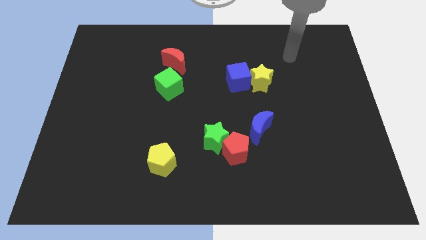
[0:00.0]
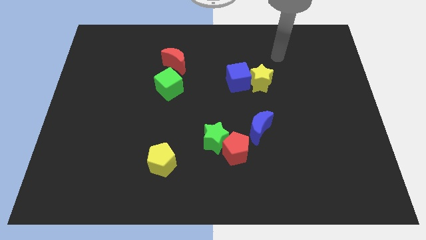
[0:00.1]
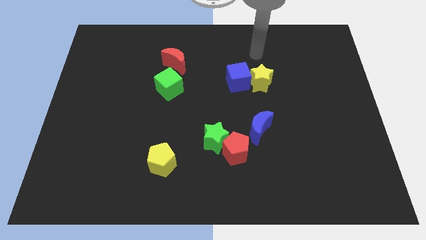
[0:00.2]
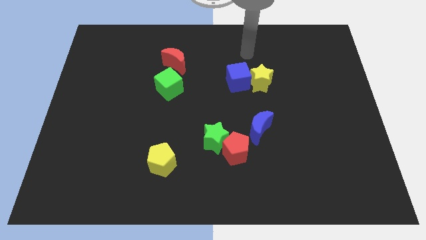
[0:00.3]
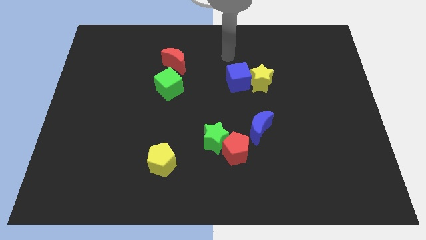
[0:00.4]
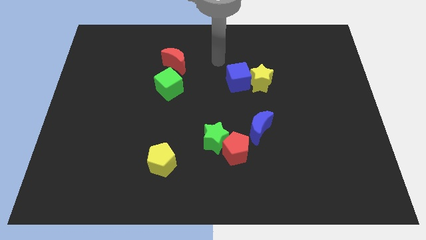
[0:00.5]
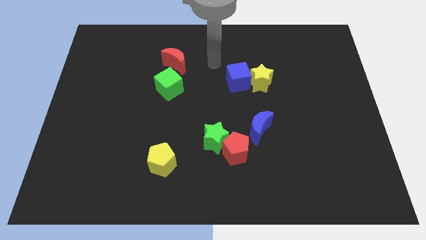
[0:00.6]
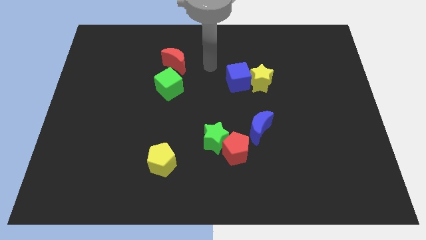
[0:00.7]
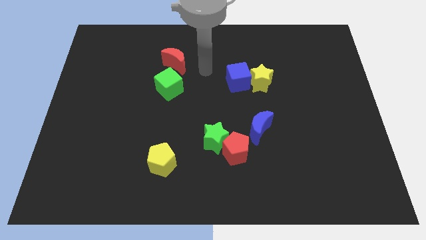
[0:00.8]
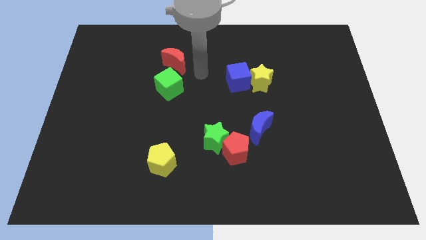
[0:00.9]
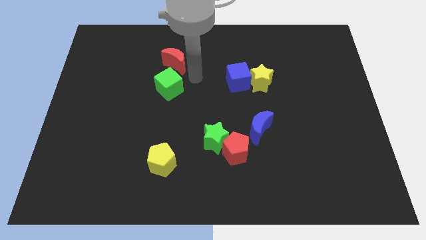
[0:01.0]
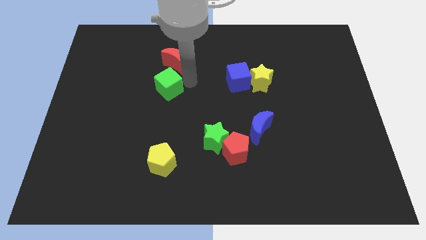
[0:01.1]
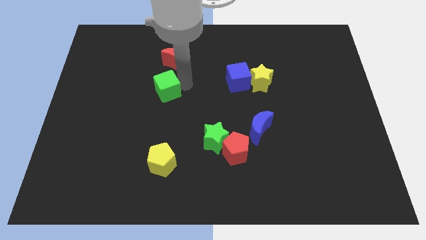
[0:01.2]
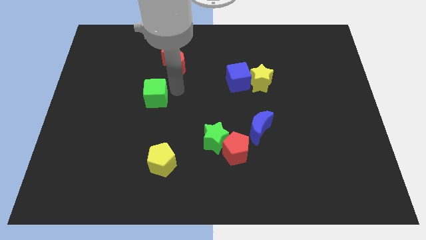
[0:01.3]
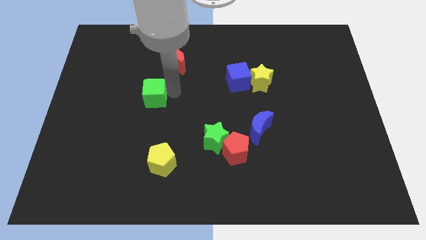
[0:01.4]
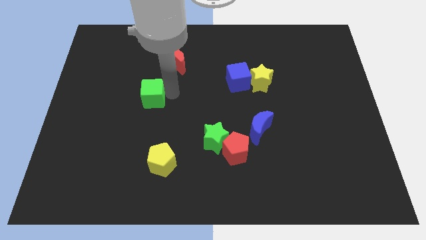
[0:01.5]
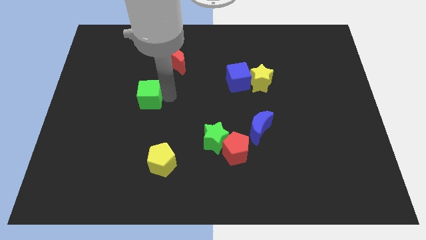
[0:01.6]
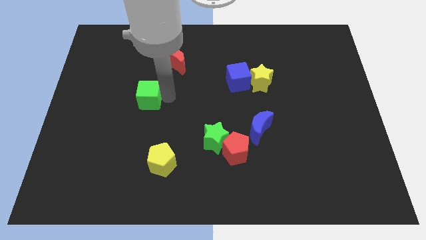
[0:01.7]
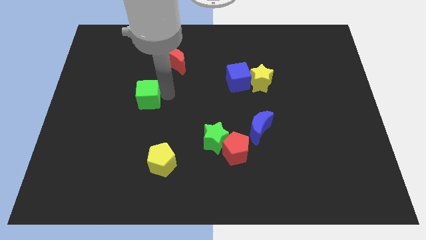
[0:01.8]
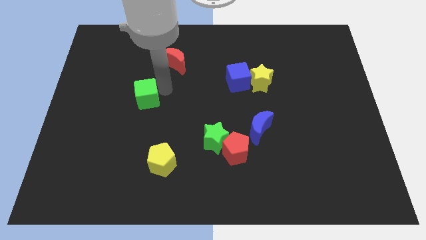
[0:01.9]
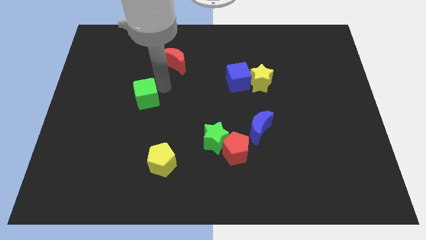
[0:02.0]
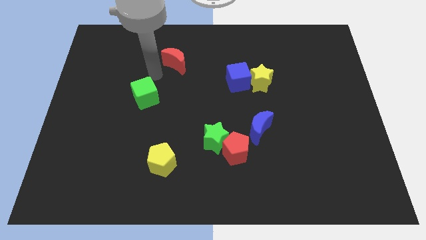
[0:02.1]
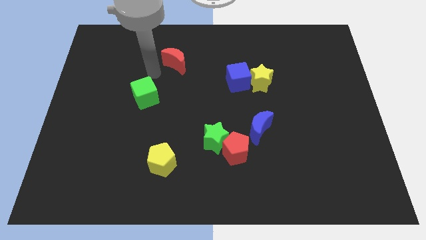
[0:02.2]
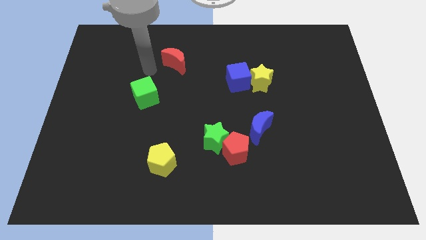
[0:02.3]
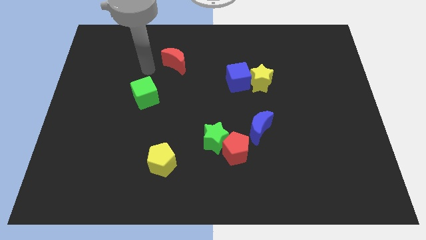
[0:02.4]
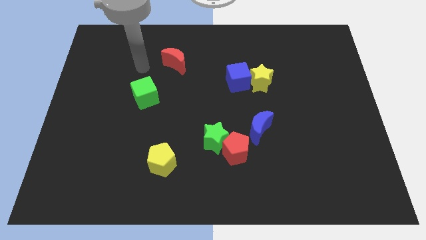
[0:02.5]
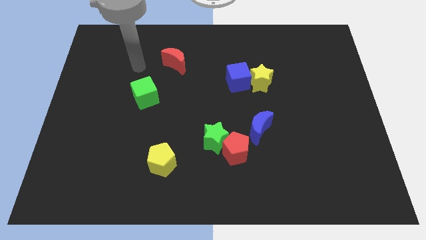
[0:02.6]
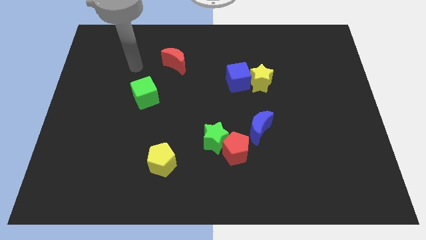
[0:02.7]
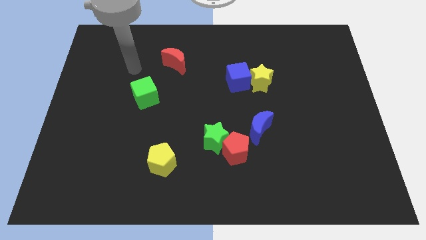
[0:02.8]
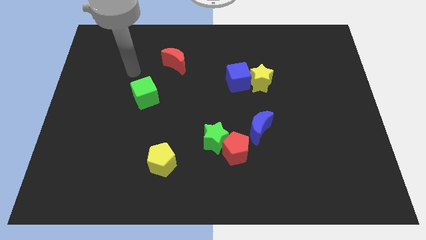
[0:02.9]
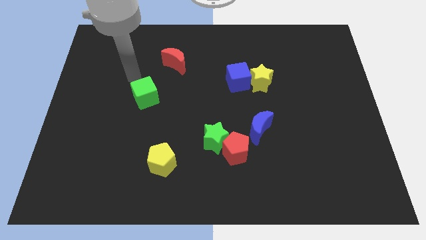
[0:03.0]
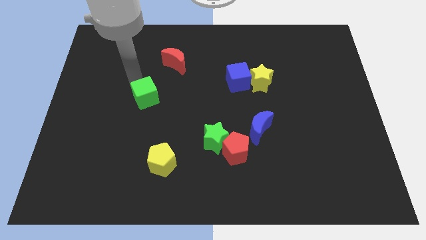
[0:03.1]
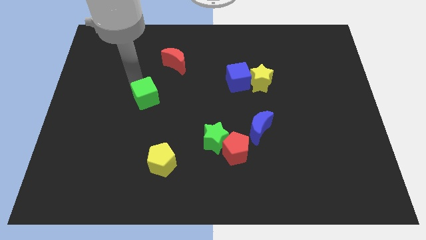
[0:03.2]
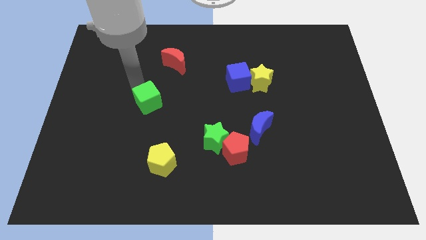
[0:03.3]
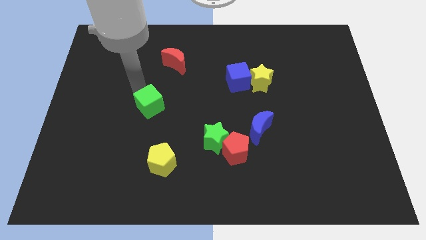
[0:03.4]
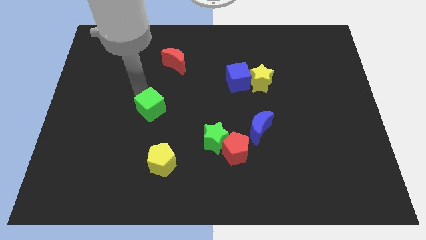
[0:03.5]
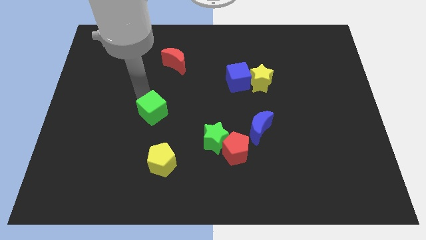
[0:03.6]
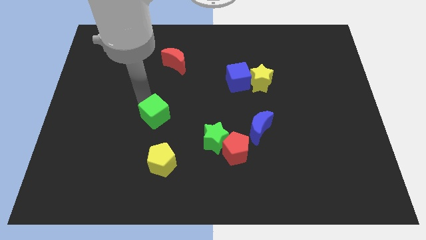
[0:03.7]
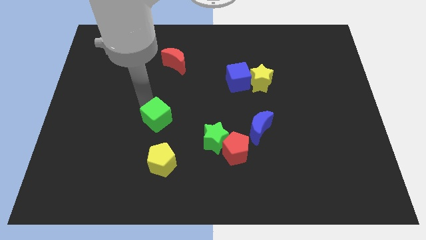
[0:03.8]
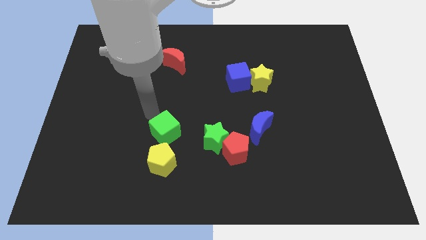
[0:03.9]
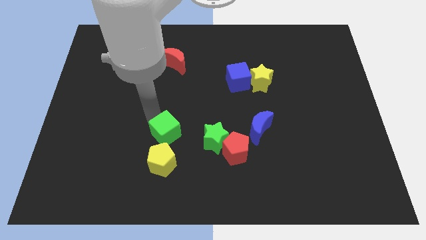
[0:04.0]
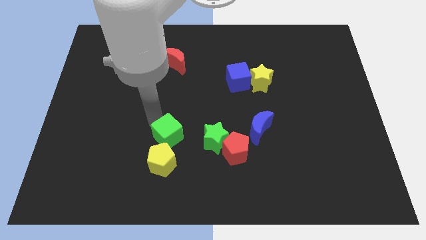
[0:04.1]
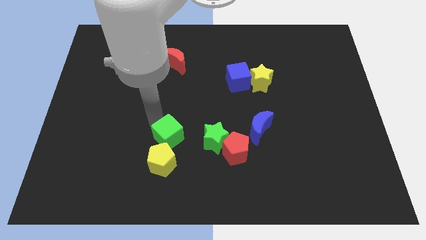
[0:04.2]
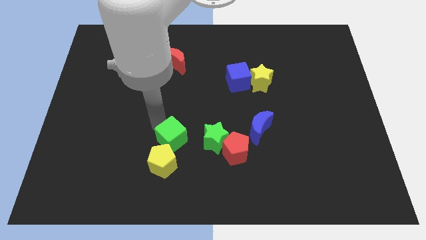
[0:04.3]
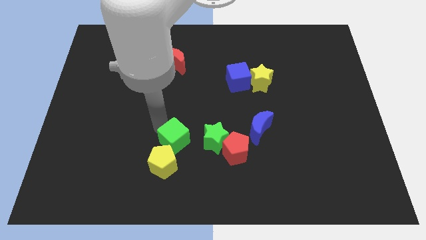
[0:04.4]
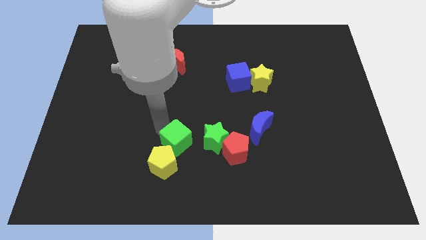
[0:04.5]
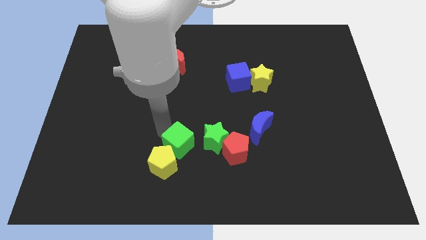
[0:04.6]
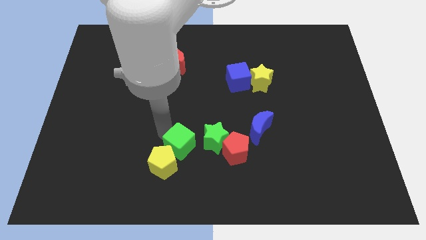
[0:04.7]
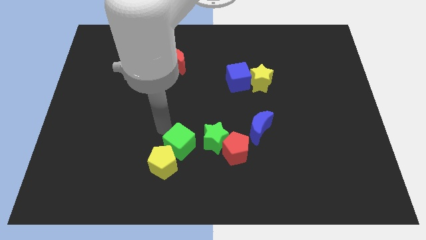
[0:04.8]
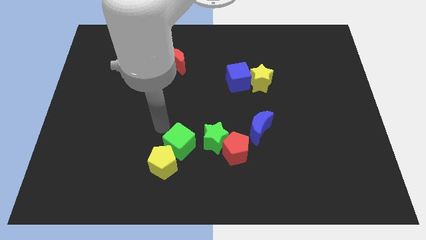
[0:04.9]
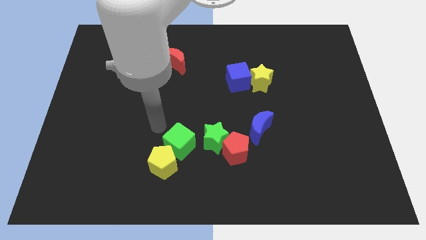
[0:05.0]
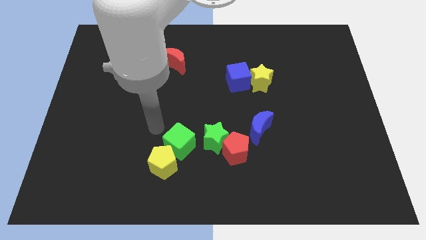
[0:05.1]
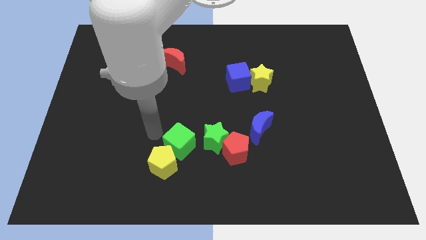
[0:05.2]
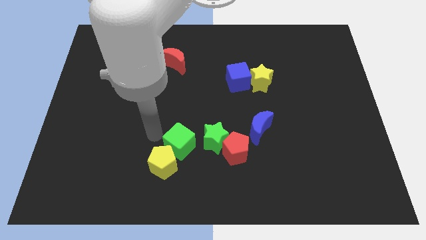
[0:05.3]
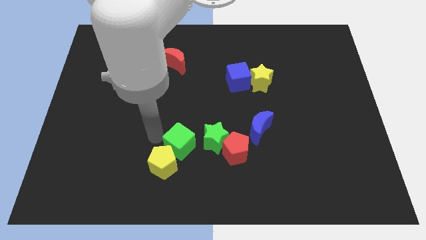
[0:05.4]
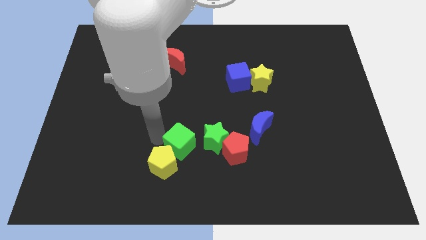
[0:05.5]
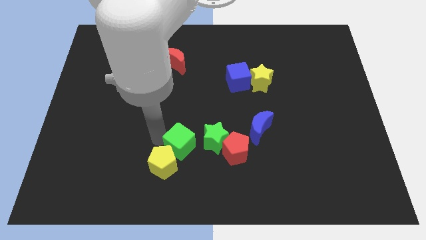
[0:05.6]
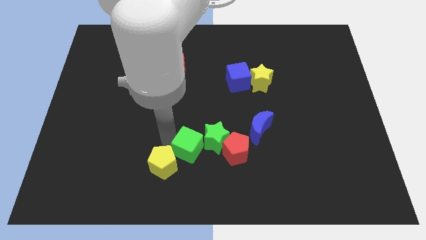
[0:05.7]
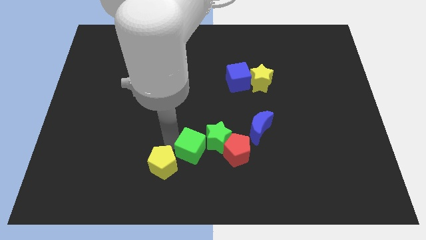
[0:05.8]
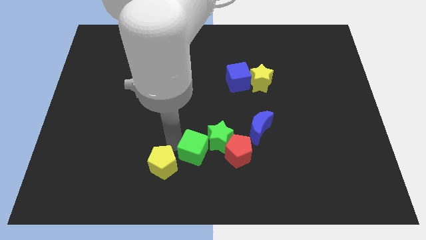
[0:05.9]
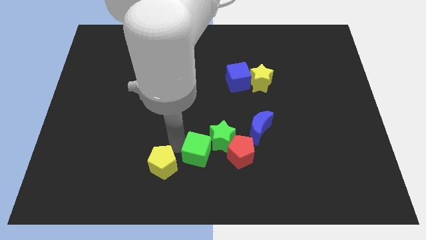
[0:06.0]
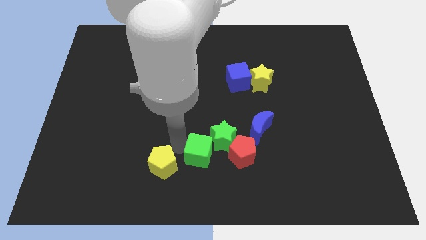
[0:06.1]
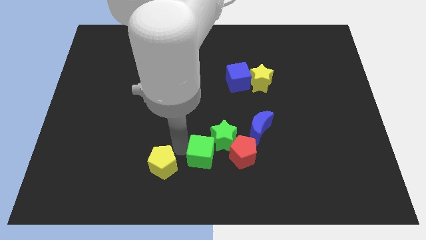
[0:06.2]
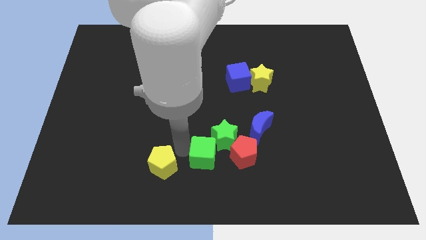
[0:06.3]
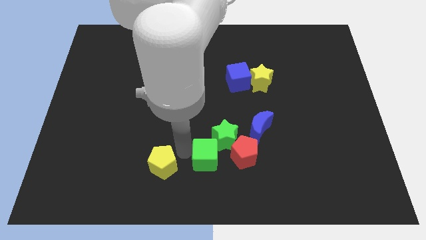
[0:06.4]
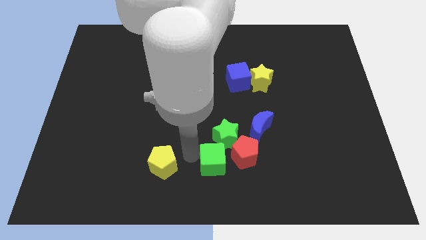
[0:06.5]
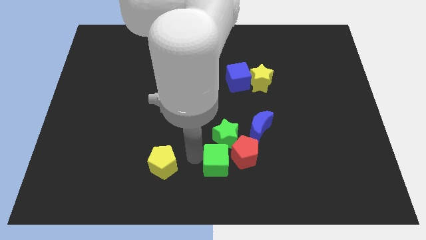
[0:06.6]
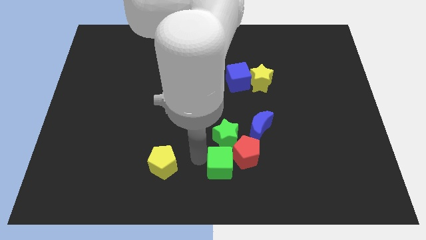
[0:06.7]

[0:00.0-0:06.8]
slide the green cube towards the red pentagon

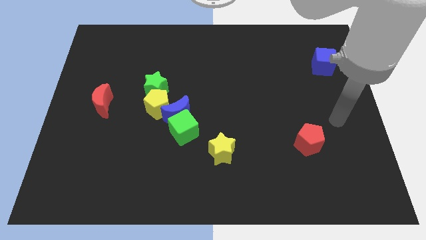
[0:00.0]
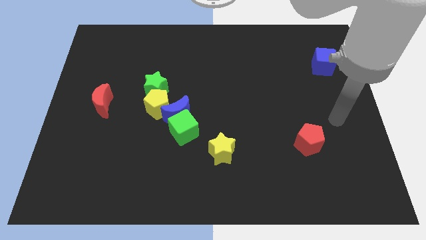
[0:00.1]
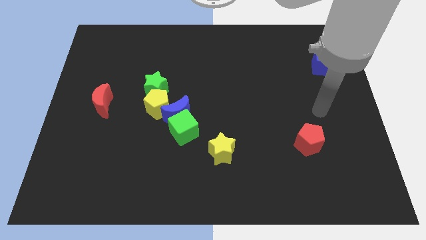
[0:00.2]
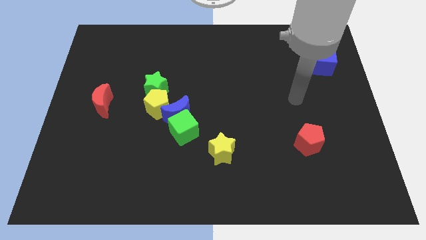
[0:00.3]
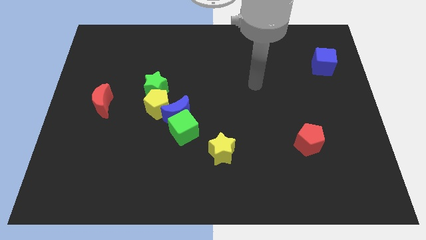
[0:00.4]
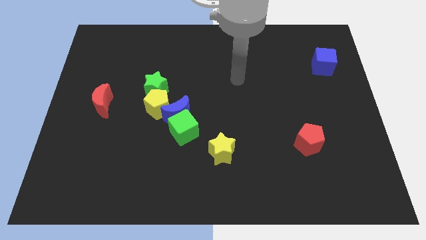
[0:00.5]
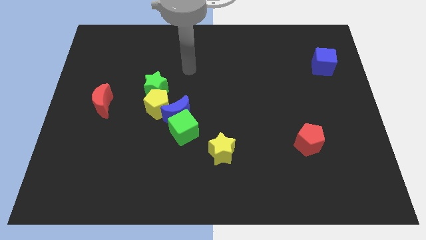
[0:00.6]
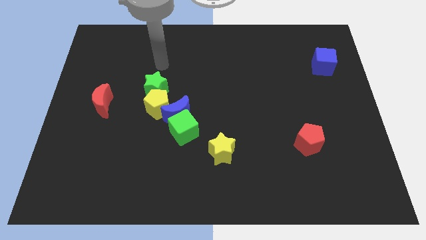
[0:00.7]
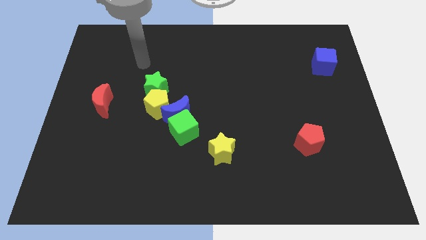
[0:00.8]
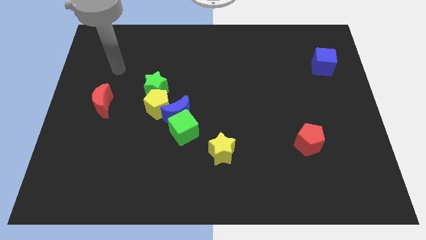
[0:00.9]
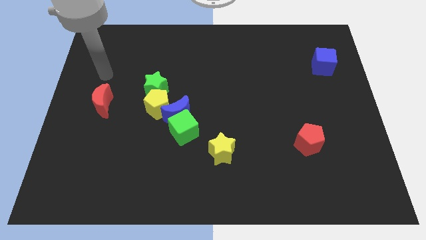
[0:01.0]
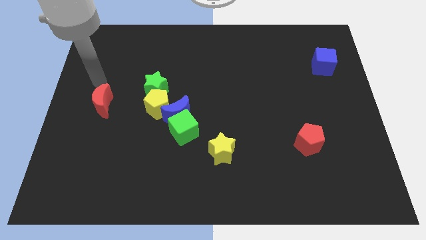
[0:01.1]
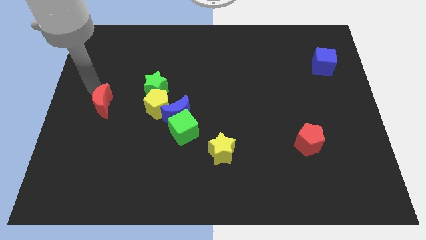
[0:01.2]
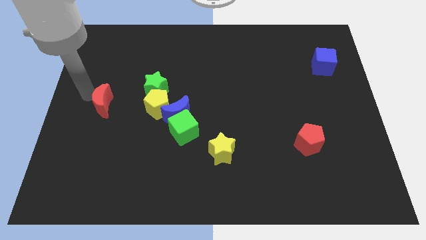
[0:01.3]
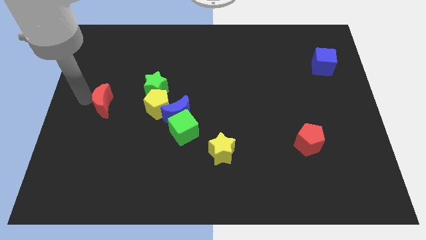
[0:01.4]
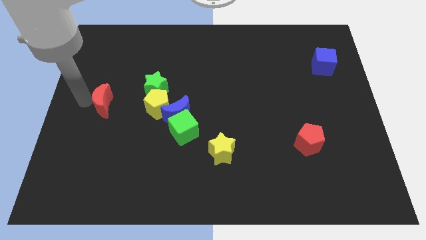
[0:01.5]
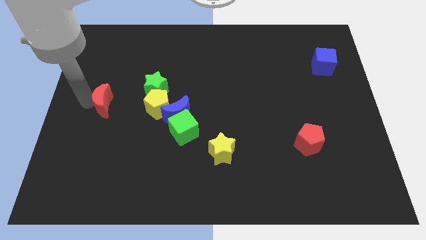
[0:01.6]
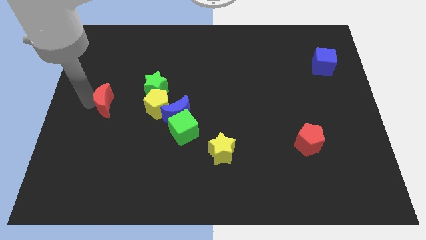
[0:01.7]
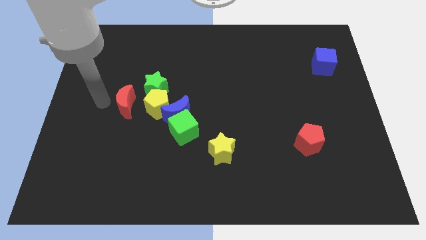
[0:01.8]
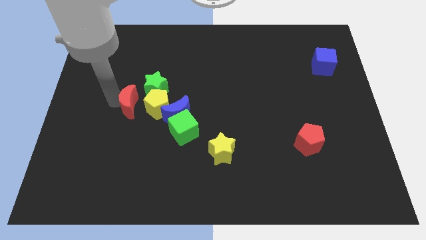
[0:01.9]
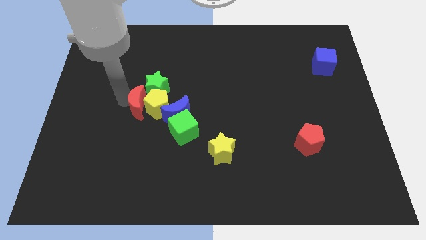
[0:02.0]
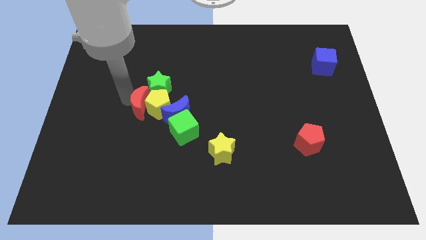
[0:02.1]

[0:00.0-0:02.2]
move the red moon next to the yellow pentagon
